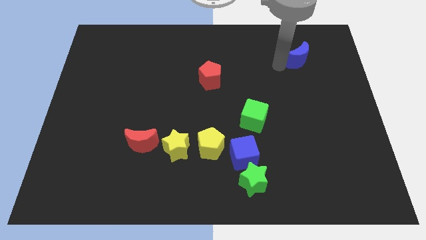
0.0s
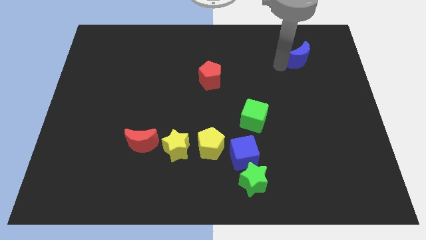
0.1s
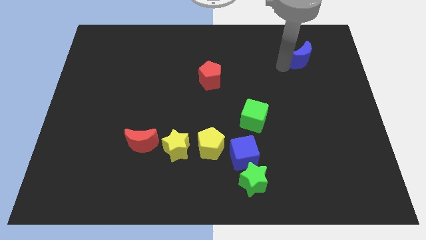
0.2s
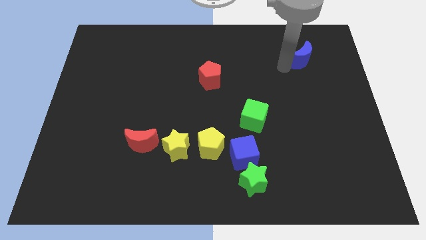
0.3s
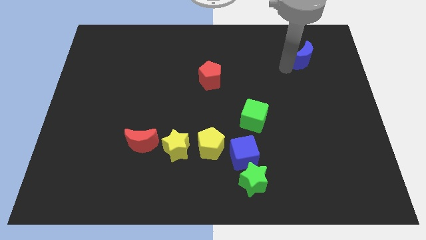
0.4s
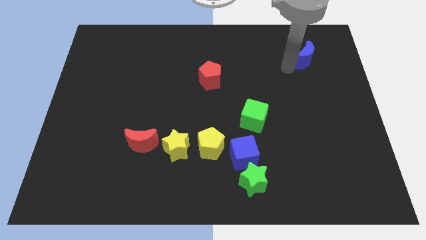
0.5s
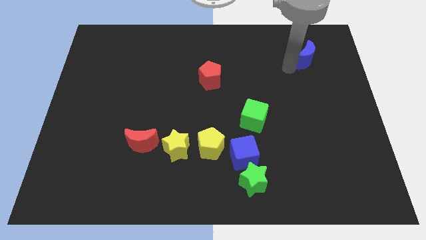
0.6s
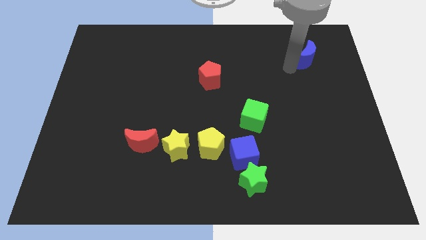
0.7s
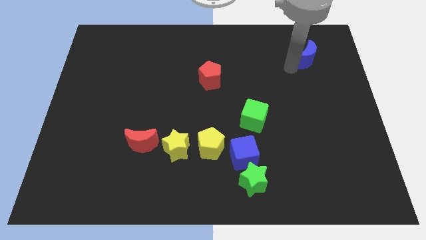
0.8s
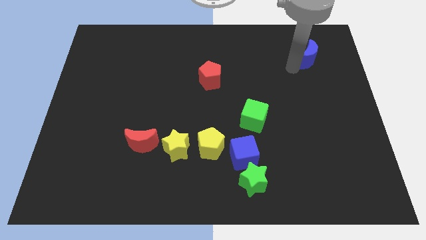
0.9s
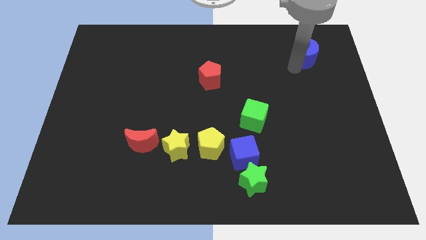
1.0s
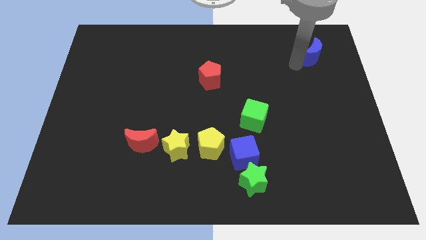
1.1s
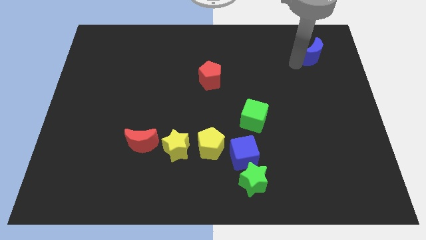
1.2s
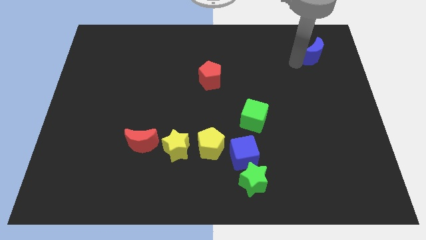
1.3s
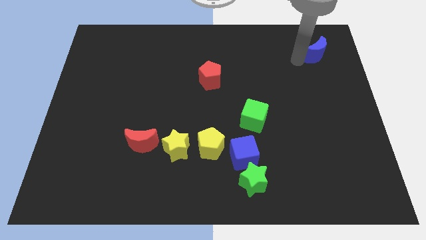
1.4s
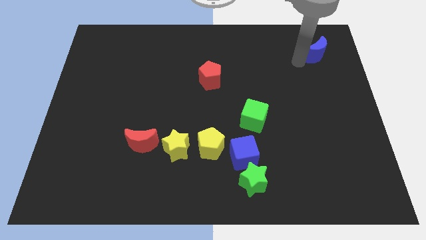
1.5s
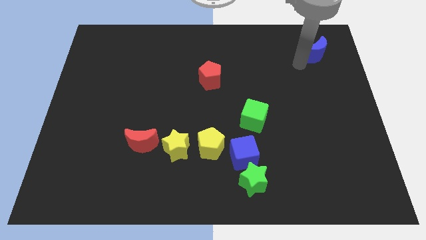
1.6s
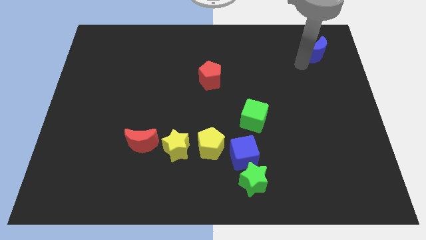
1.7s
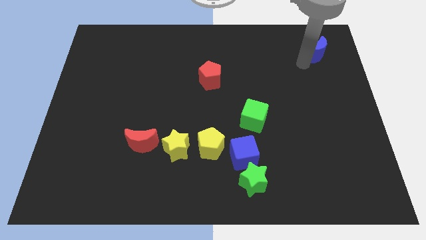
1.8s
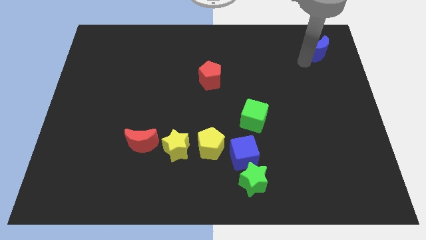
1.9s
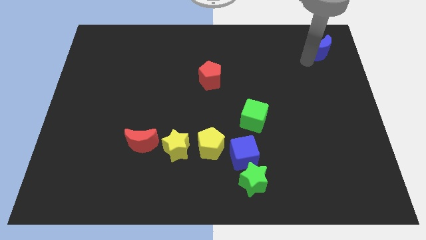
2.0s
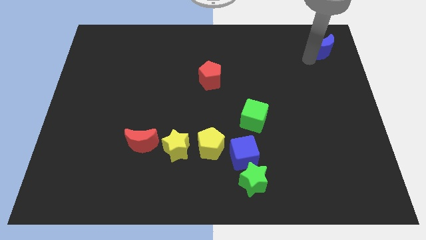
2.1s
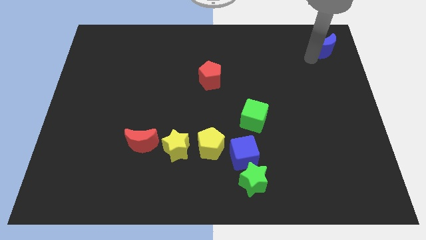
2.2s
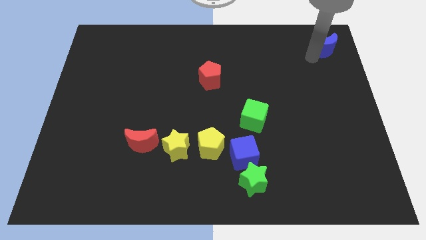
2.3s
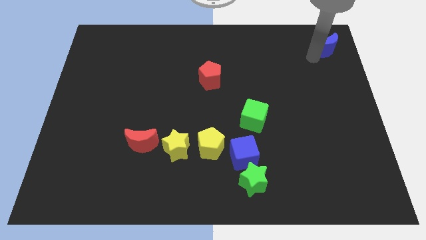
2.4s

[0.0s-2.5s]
push the blue moon towards the top right side of the board

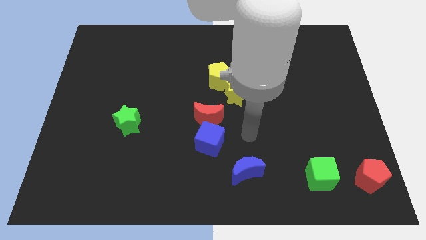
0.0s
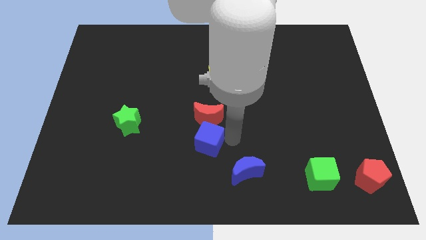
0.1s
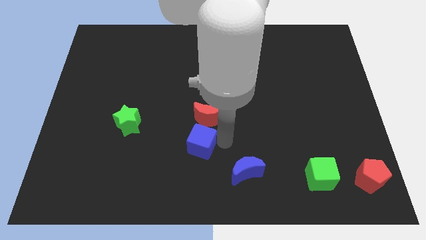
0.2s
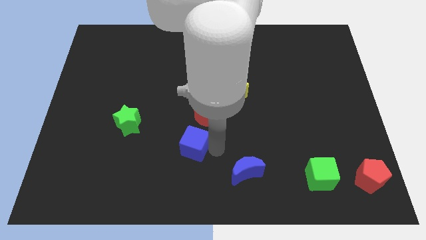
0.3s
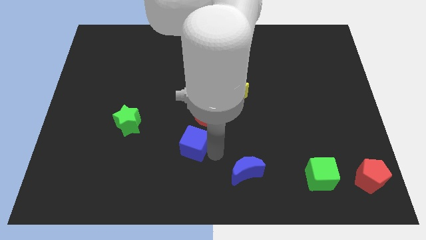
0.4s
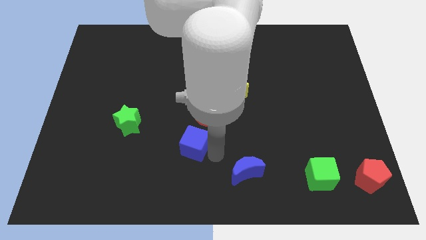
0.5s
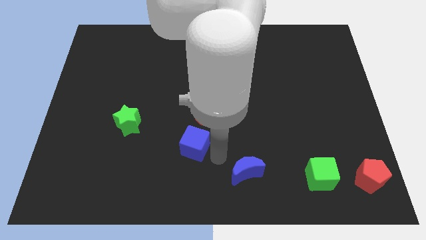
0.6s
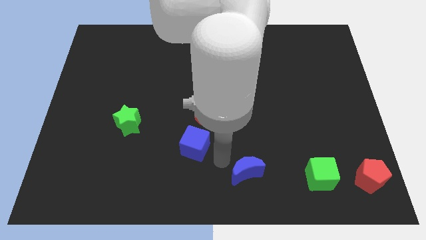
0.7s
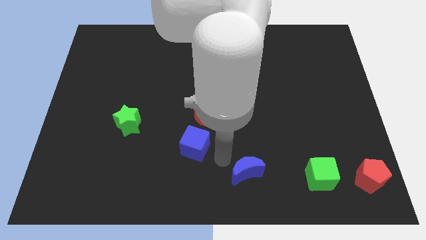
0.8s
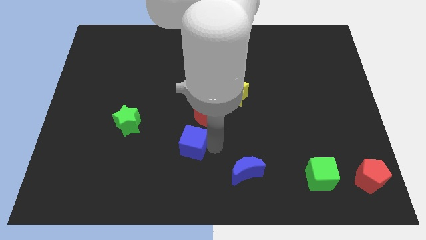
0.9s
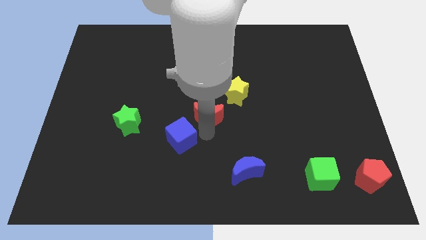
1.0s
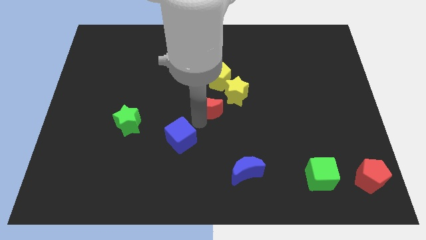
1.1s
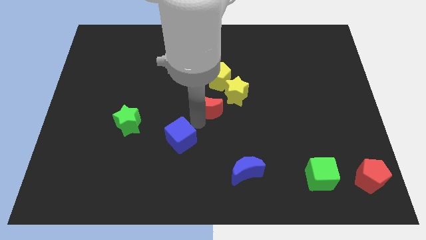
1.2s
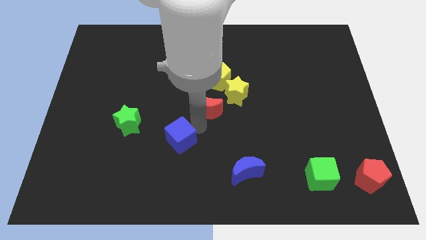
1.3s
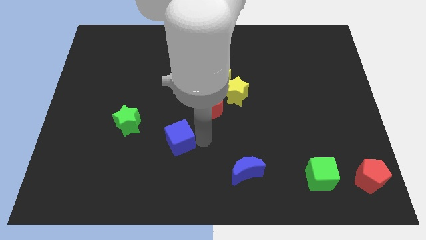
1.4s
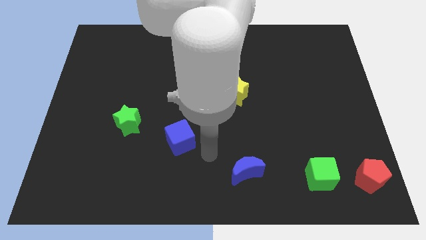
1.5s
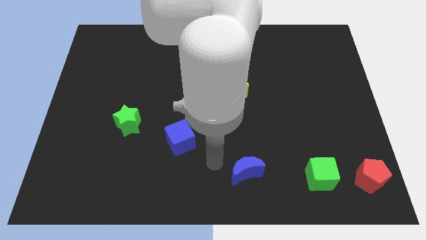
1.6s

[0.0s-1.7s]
separate red moon and blue cube

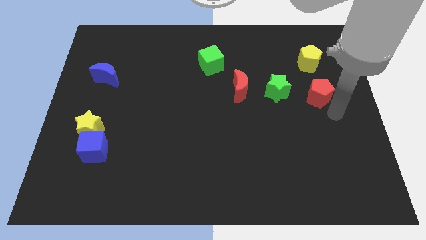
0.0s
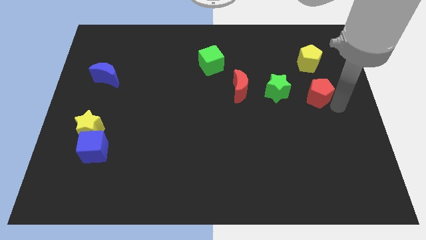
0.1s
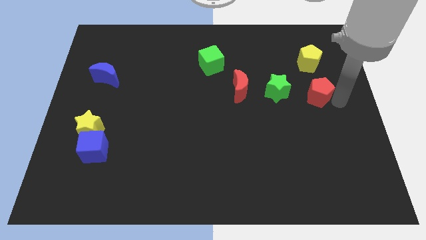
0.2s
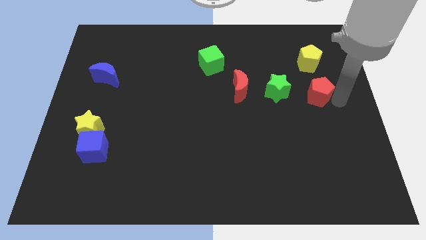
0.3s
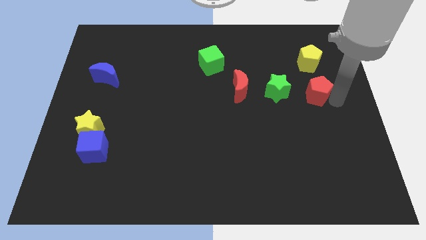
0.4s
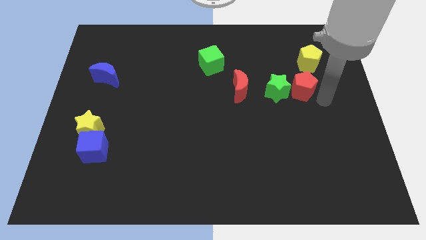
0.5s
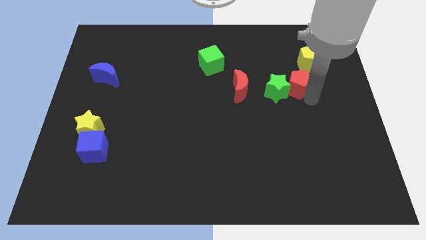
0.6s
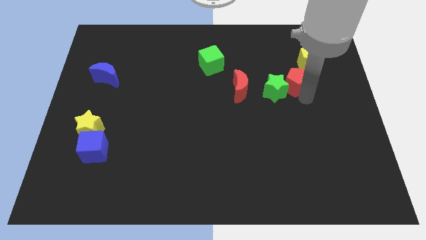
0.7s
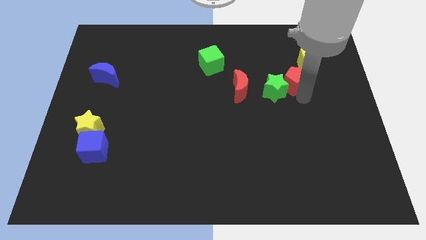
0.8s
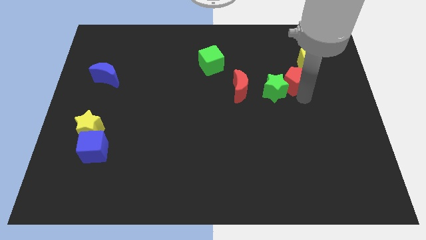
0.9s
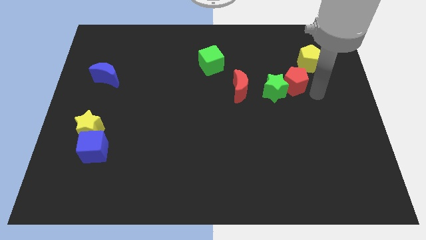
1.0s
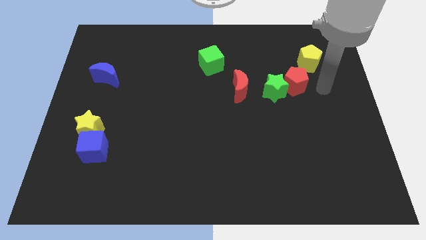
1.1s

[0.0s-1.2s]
push the red pentagon into the green star

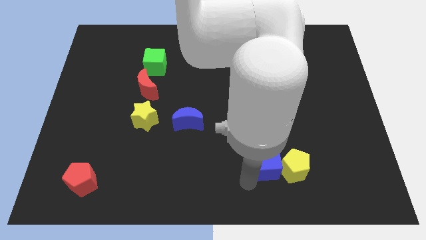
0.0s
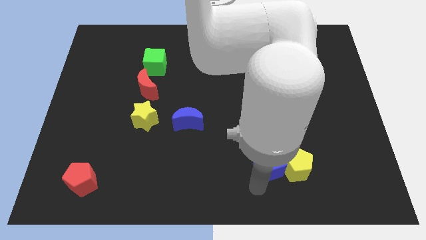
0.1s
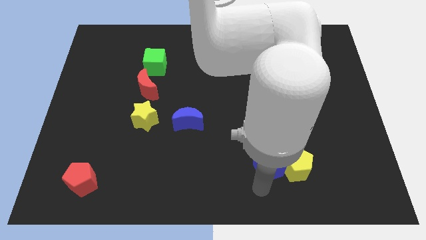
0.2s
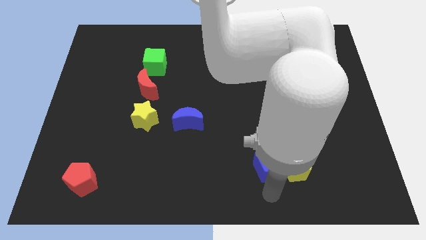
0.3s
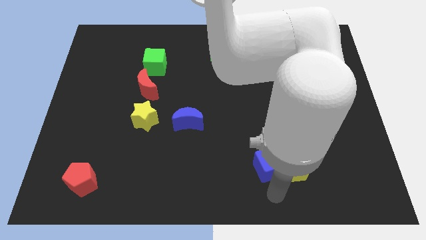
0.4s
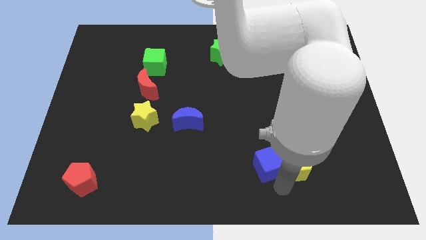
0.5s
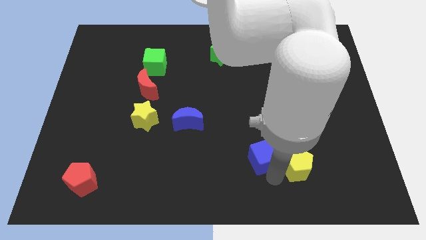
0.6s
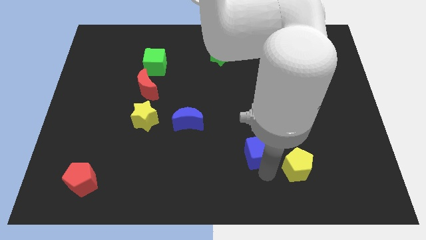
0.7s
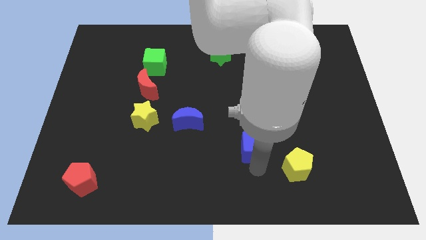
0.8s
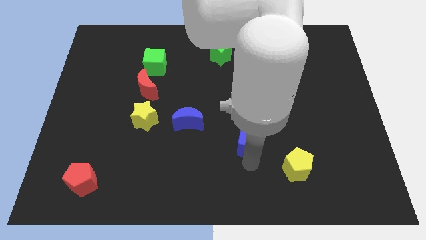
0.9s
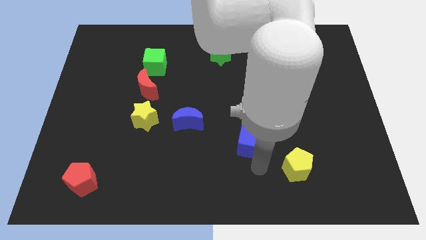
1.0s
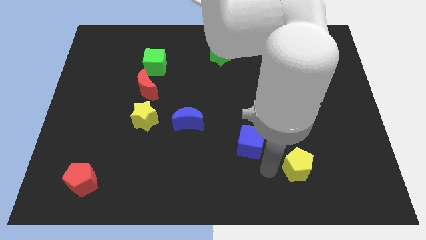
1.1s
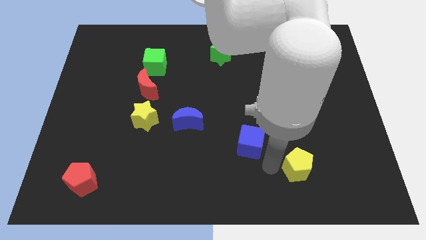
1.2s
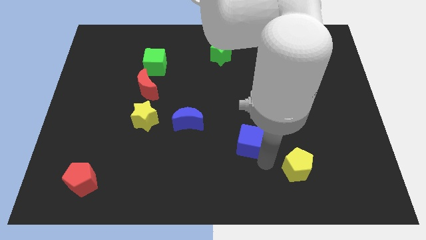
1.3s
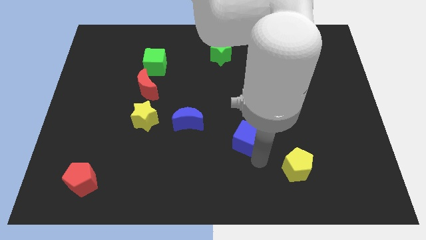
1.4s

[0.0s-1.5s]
push the blue cube away from the yellow pentagon

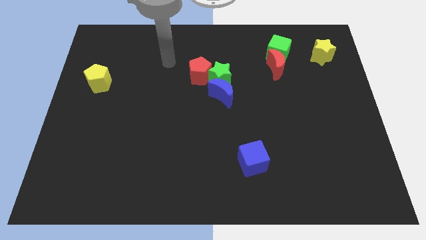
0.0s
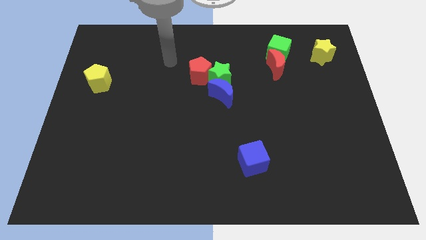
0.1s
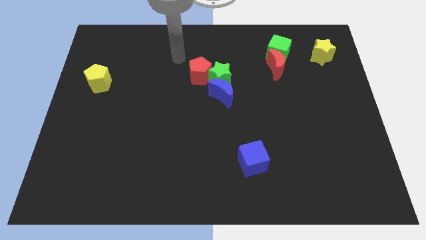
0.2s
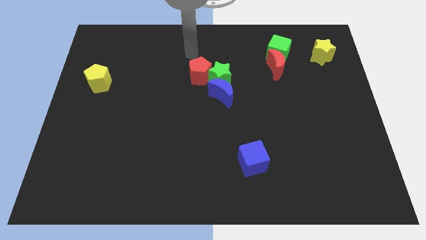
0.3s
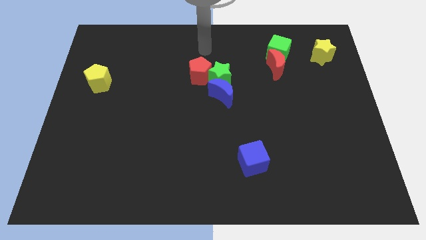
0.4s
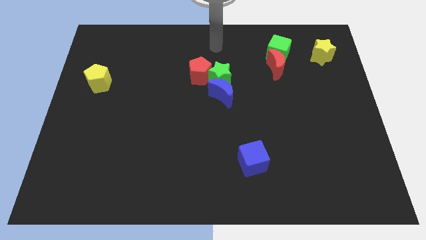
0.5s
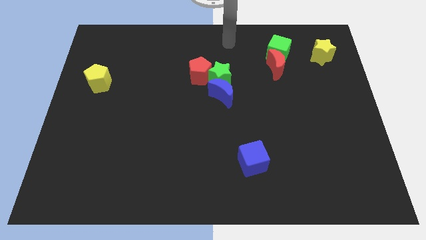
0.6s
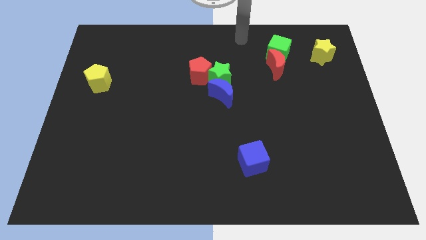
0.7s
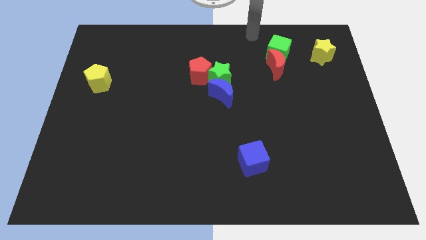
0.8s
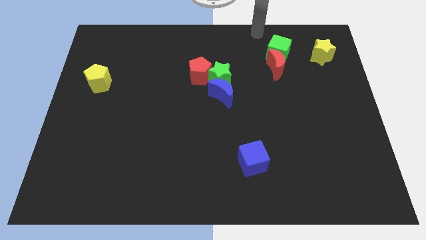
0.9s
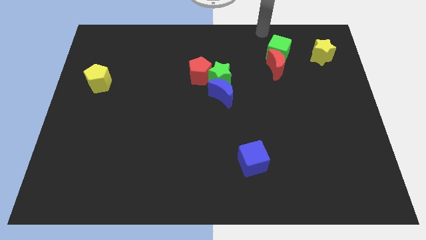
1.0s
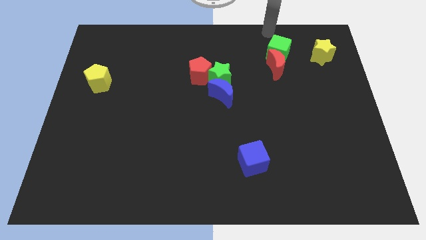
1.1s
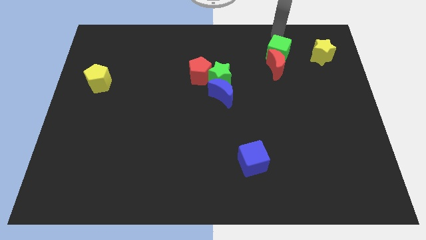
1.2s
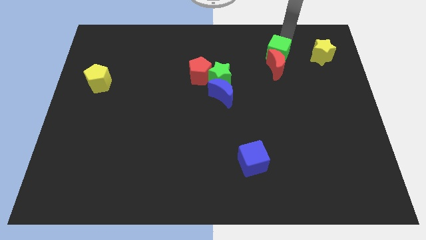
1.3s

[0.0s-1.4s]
point your hand at the top side of the green cube

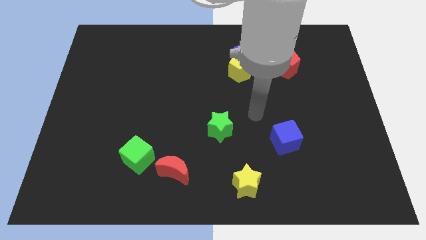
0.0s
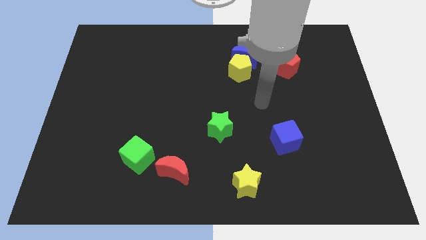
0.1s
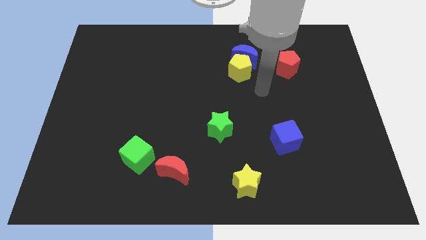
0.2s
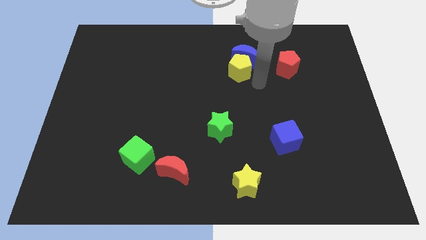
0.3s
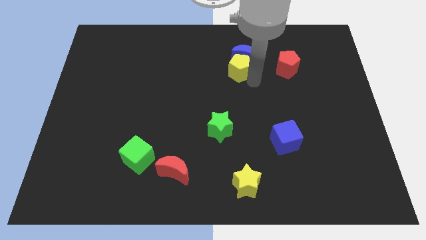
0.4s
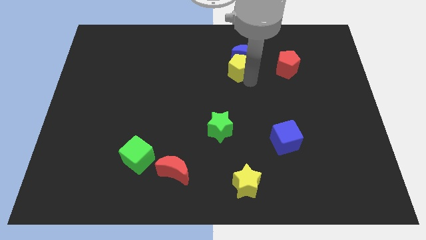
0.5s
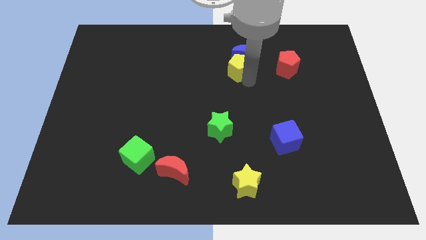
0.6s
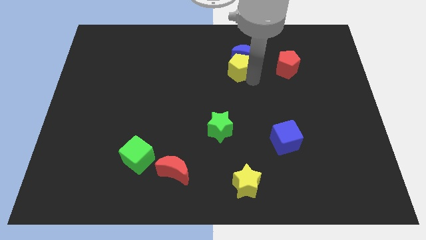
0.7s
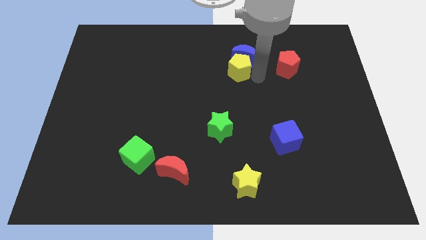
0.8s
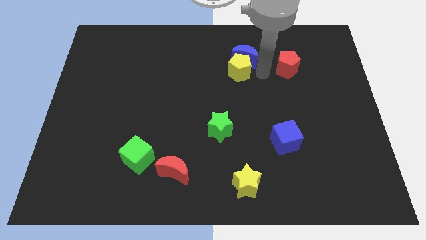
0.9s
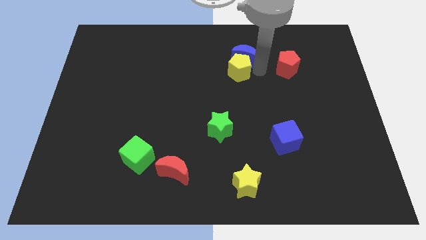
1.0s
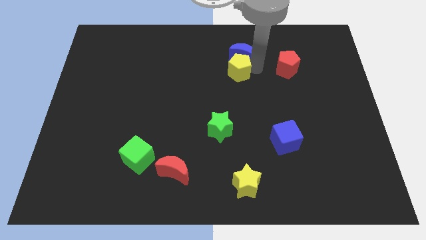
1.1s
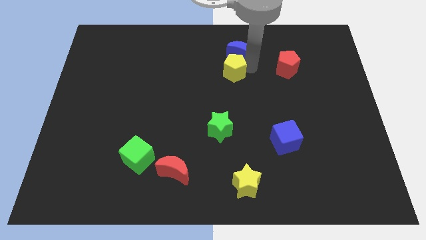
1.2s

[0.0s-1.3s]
place your arm to the right of yellow pentagon
